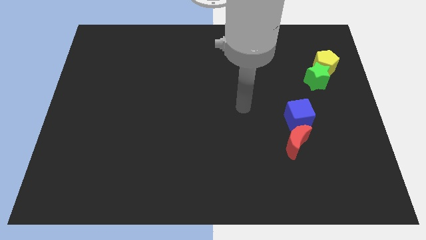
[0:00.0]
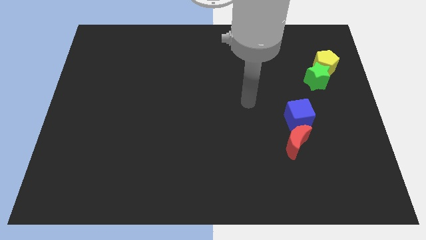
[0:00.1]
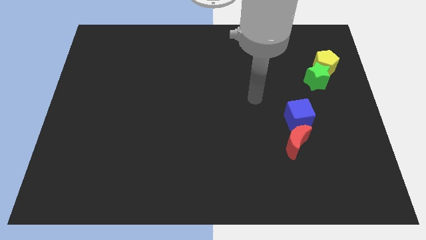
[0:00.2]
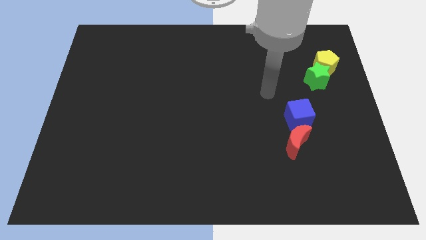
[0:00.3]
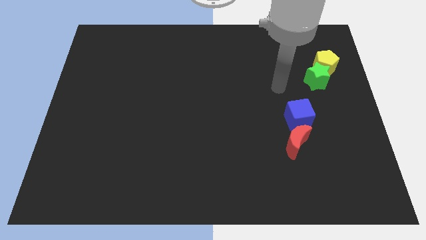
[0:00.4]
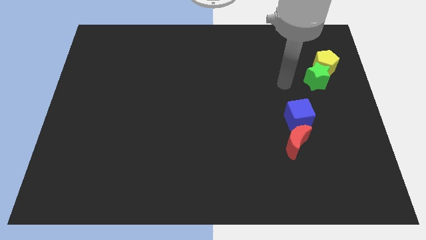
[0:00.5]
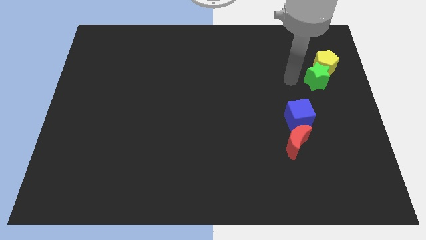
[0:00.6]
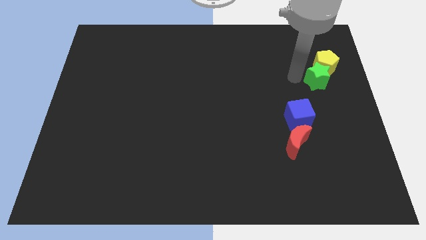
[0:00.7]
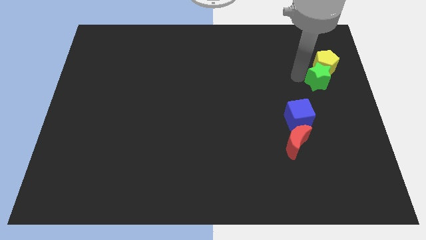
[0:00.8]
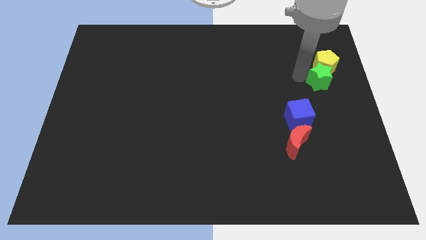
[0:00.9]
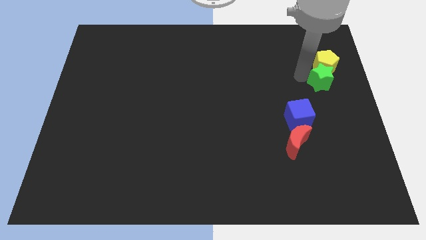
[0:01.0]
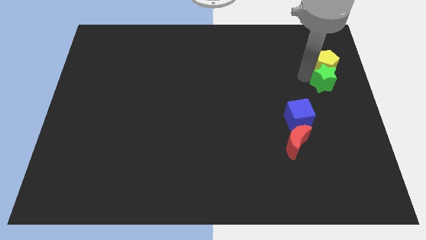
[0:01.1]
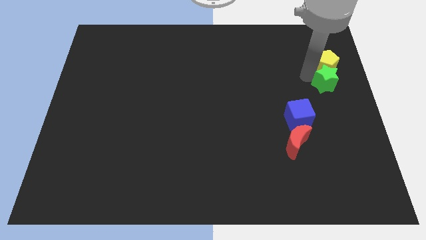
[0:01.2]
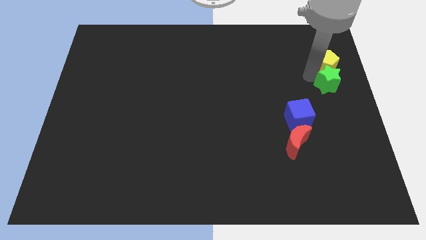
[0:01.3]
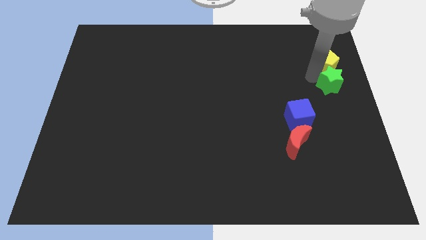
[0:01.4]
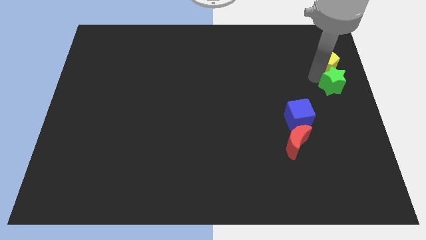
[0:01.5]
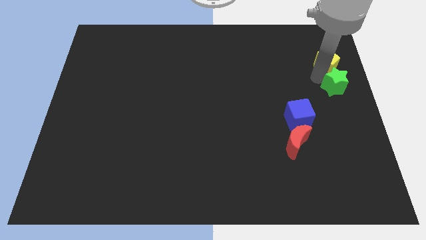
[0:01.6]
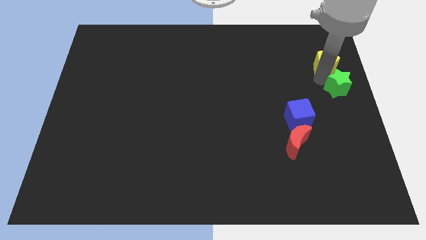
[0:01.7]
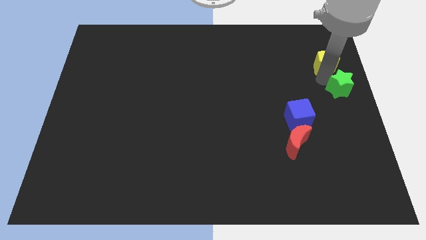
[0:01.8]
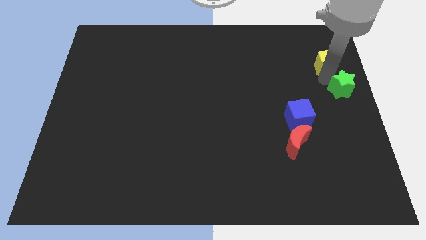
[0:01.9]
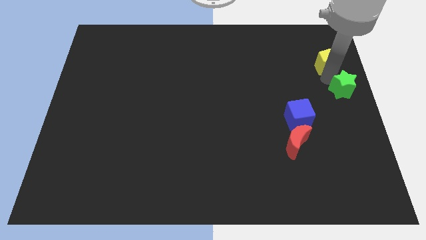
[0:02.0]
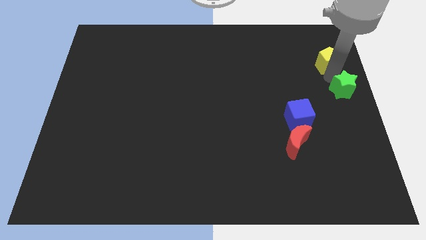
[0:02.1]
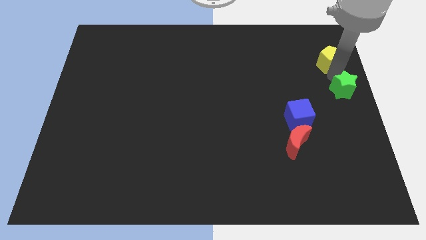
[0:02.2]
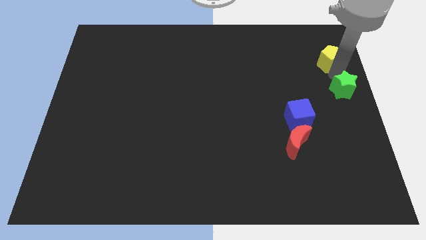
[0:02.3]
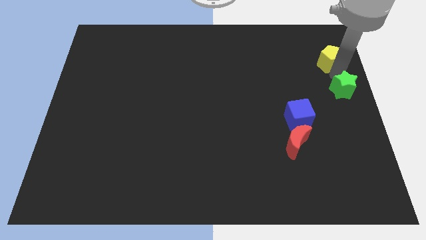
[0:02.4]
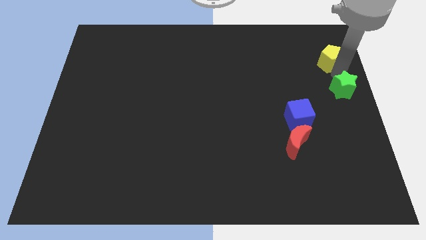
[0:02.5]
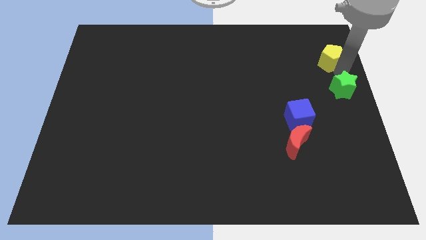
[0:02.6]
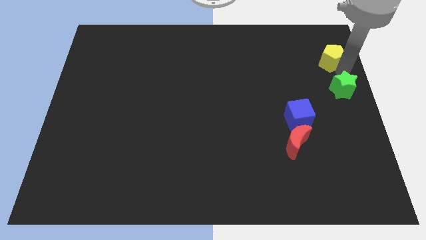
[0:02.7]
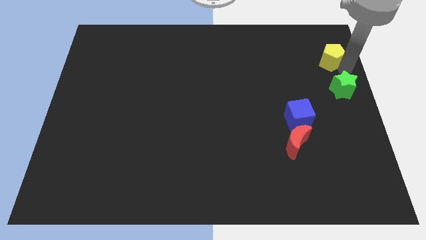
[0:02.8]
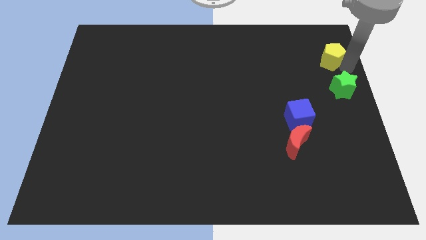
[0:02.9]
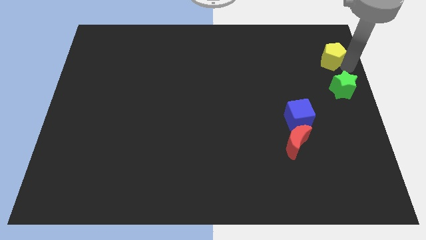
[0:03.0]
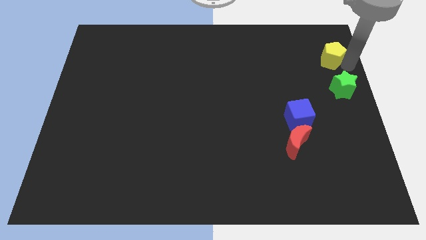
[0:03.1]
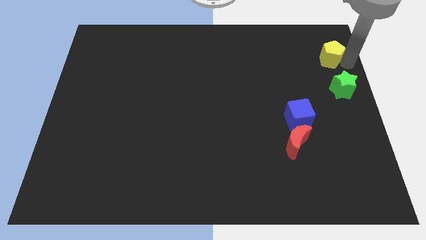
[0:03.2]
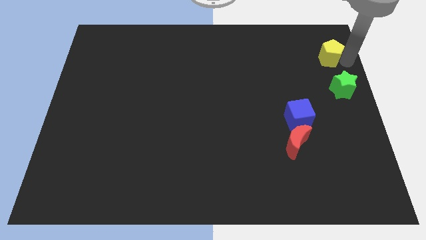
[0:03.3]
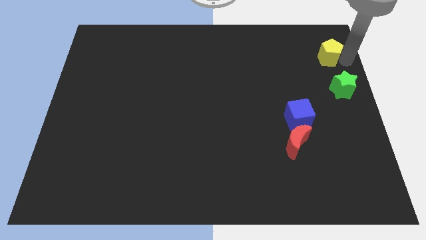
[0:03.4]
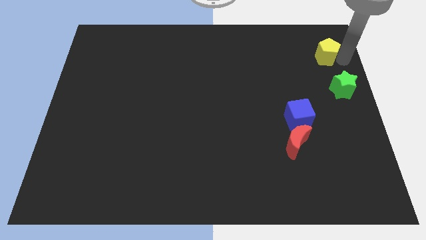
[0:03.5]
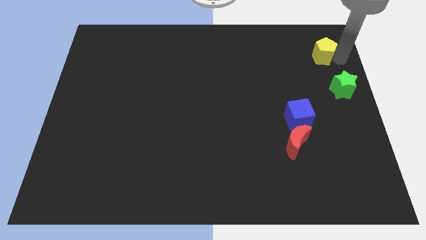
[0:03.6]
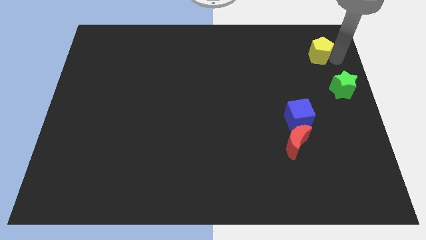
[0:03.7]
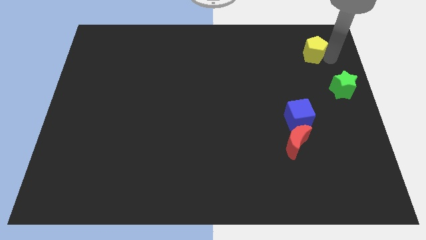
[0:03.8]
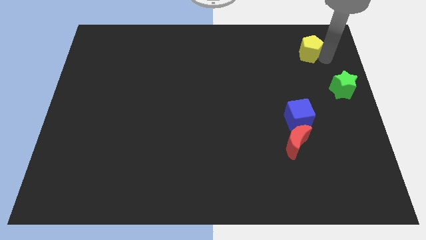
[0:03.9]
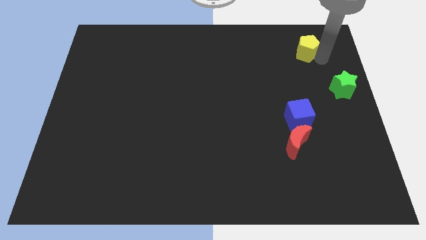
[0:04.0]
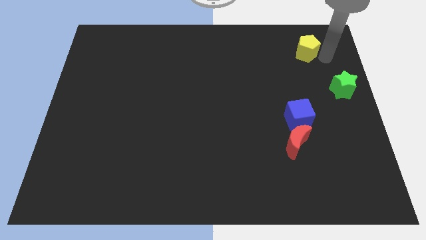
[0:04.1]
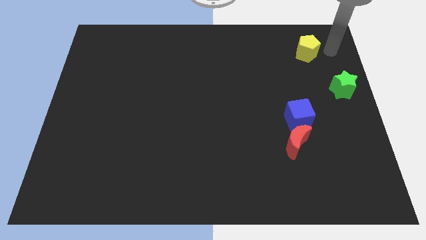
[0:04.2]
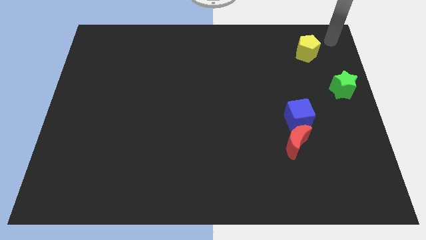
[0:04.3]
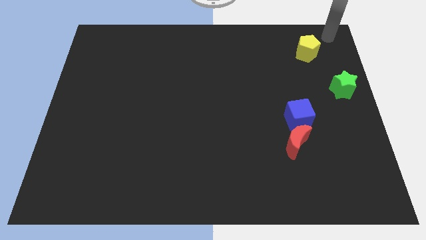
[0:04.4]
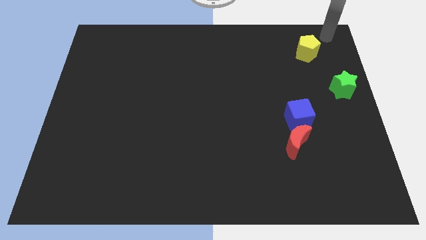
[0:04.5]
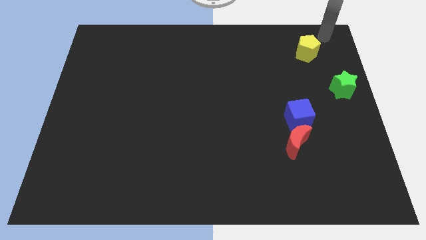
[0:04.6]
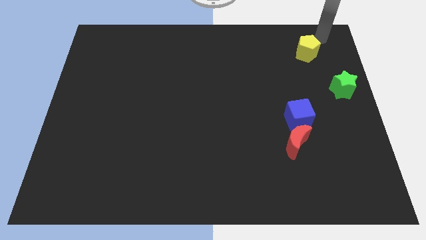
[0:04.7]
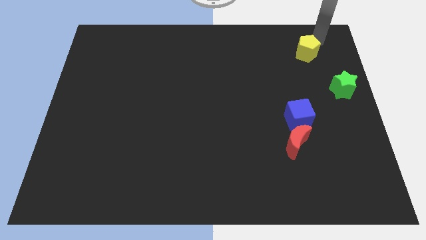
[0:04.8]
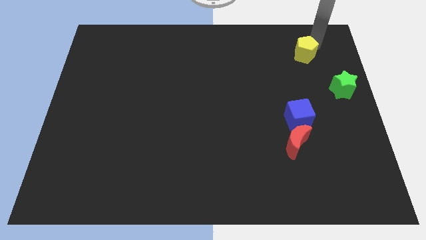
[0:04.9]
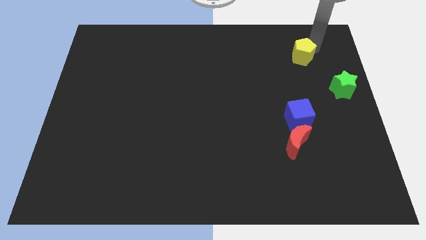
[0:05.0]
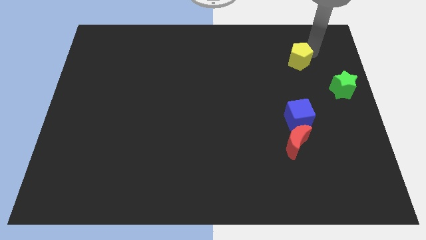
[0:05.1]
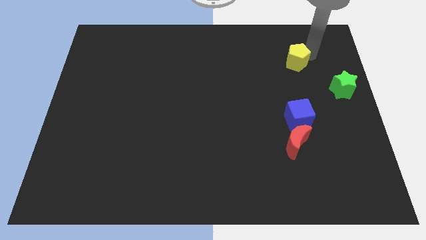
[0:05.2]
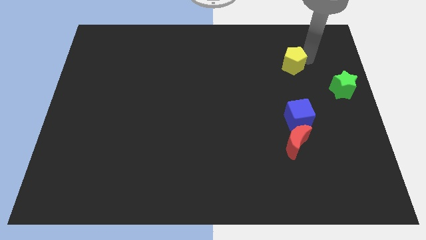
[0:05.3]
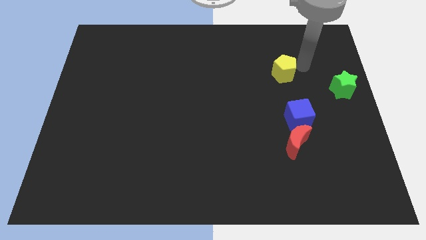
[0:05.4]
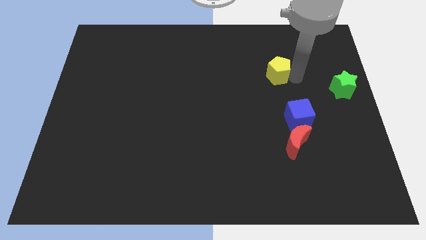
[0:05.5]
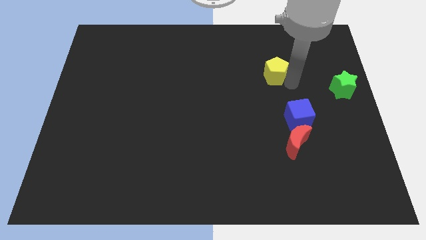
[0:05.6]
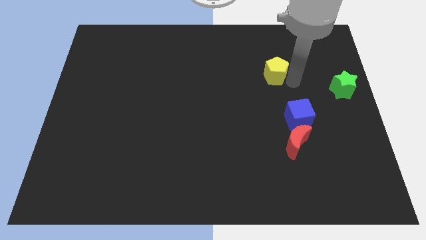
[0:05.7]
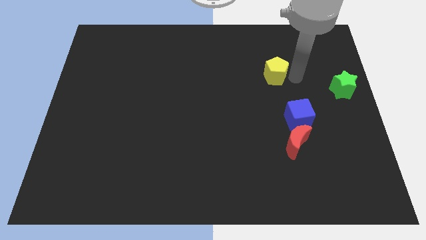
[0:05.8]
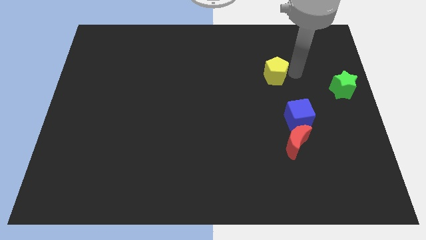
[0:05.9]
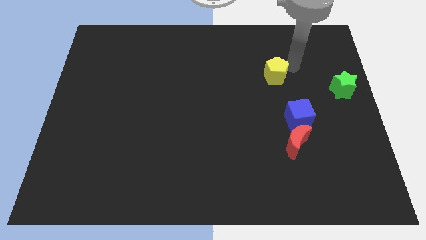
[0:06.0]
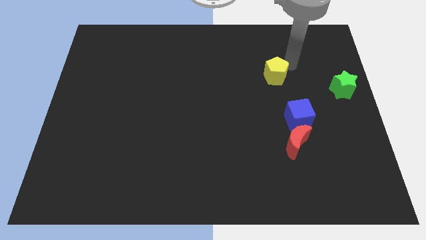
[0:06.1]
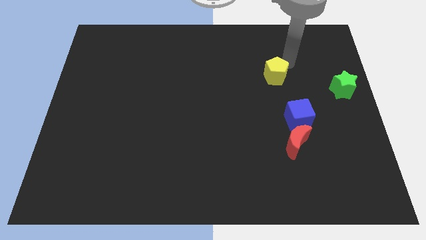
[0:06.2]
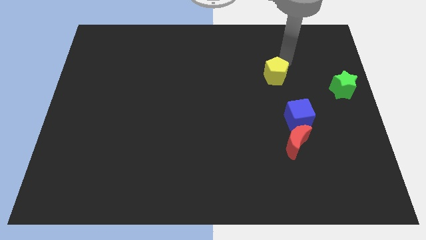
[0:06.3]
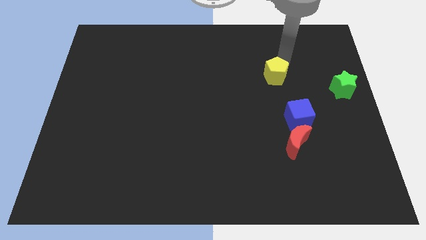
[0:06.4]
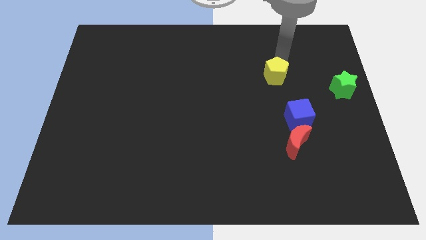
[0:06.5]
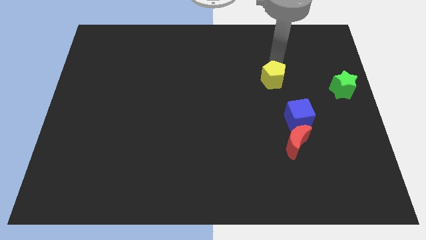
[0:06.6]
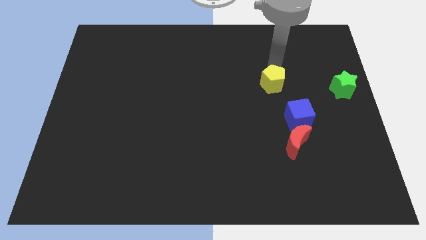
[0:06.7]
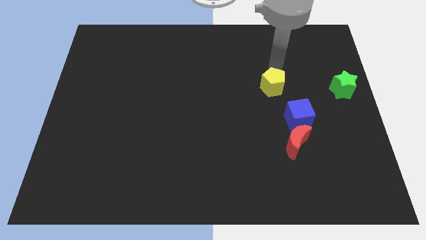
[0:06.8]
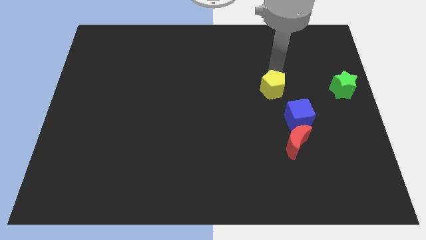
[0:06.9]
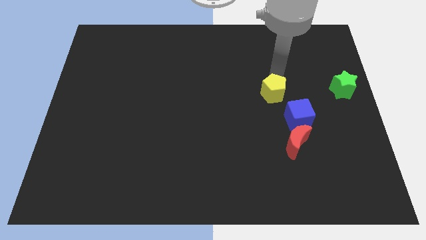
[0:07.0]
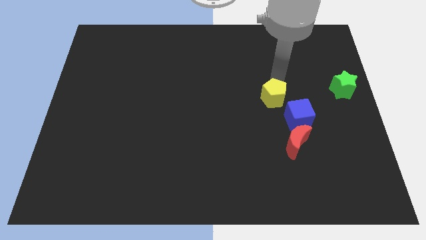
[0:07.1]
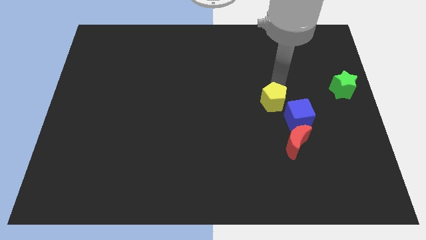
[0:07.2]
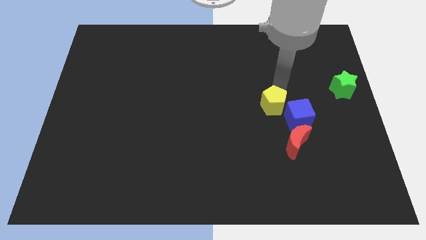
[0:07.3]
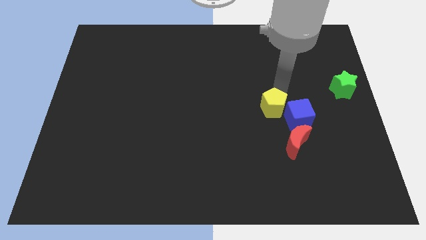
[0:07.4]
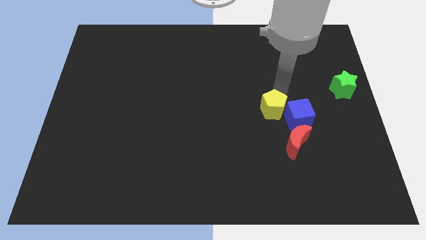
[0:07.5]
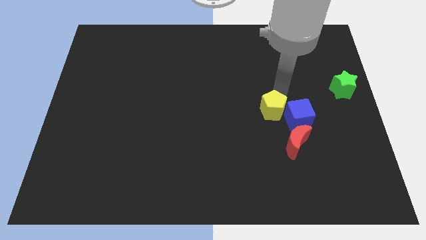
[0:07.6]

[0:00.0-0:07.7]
put the pentagon towards the cube

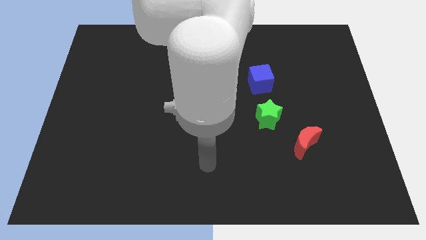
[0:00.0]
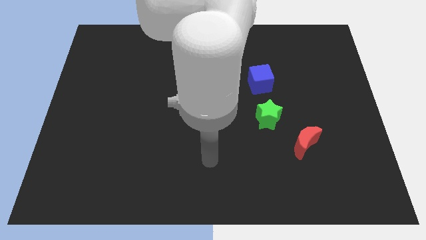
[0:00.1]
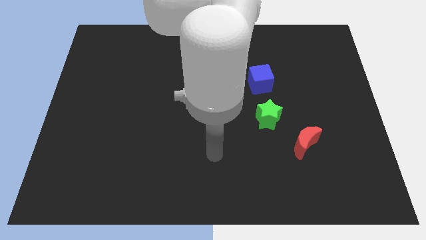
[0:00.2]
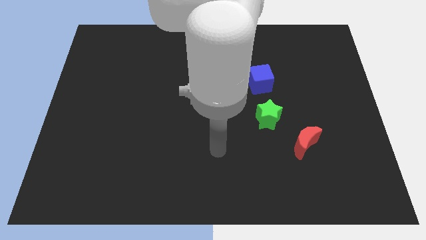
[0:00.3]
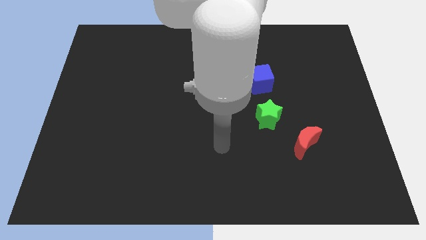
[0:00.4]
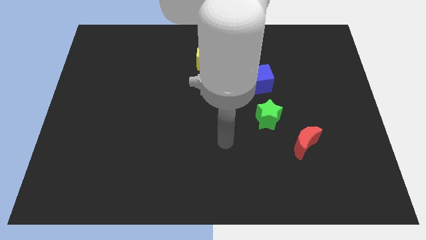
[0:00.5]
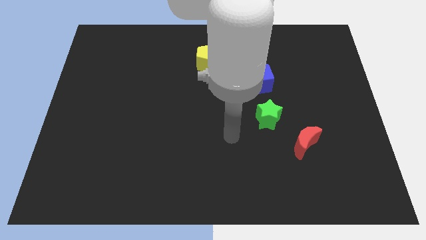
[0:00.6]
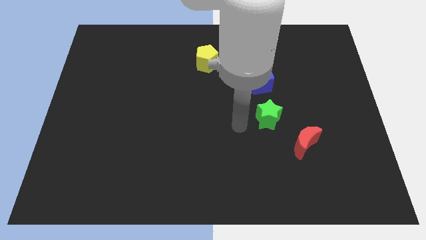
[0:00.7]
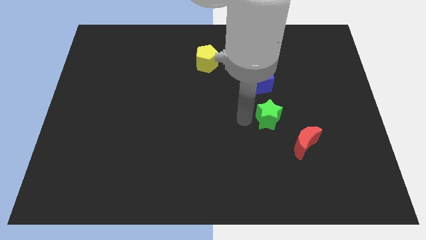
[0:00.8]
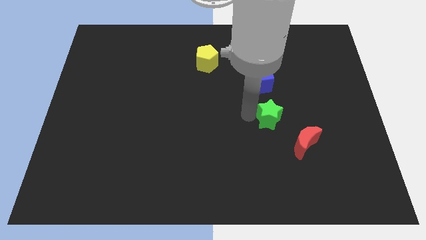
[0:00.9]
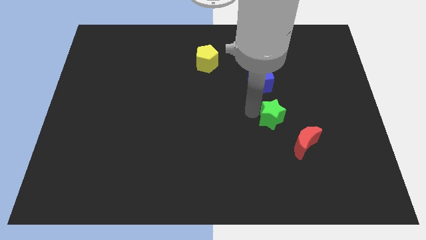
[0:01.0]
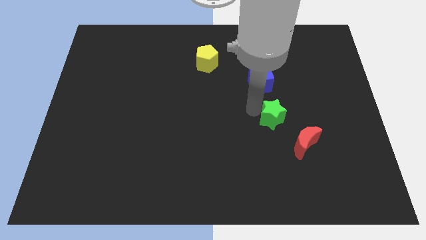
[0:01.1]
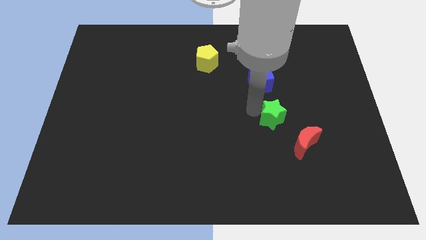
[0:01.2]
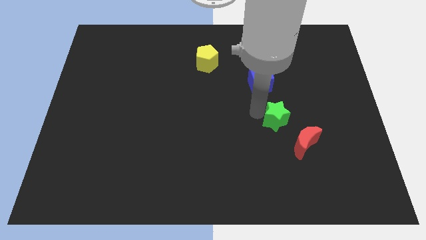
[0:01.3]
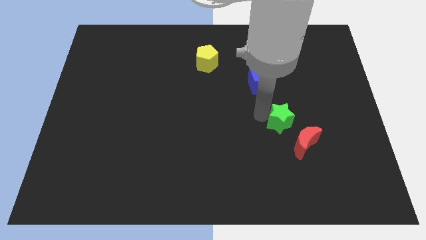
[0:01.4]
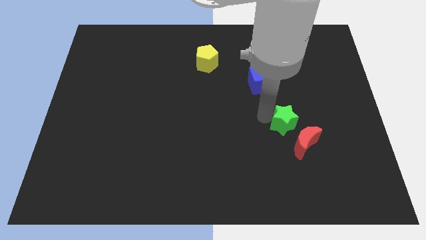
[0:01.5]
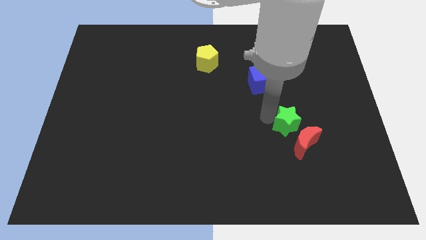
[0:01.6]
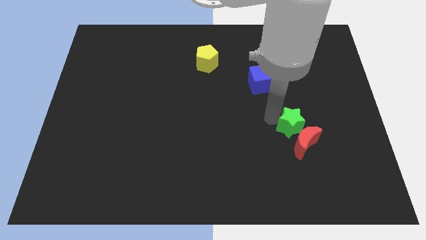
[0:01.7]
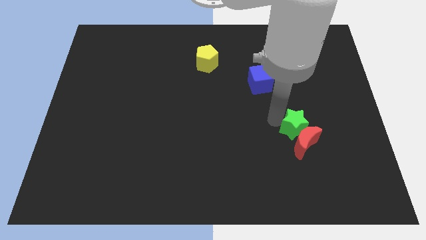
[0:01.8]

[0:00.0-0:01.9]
move the green star close to the red block
